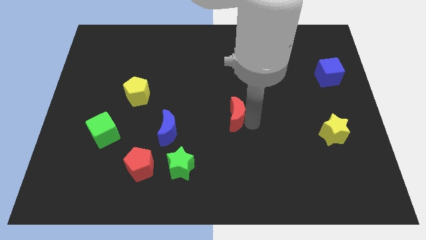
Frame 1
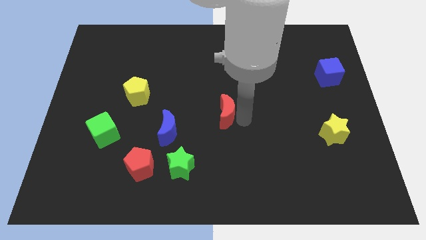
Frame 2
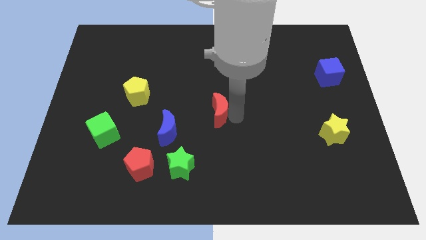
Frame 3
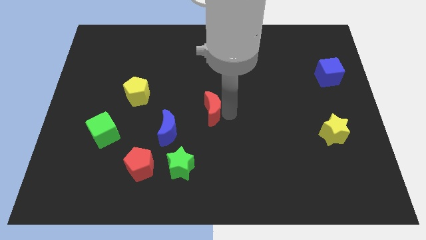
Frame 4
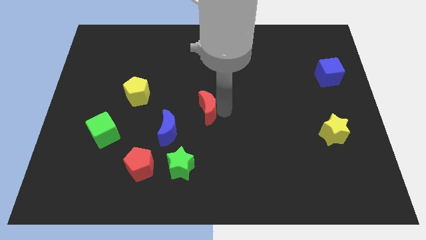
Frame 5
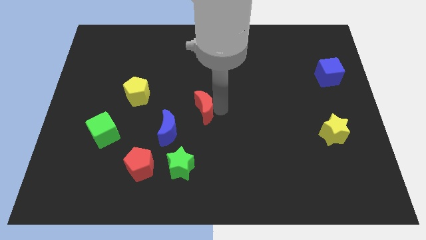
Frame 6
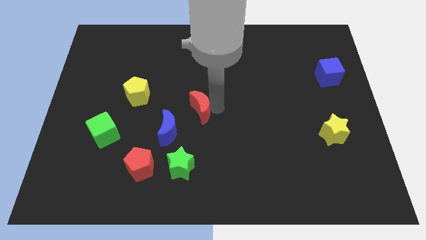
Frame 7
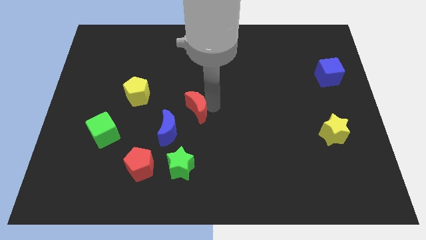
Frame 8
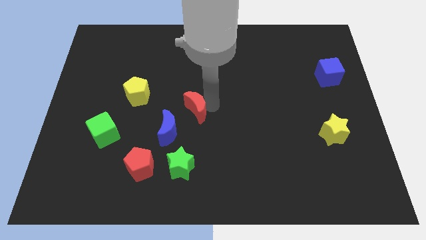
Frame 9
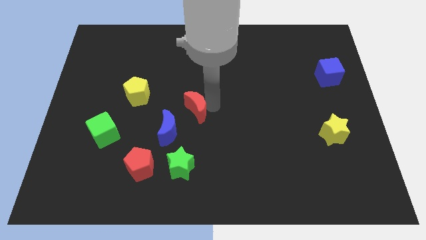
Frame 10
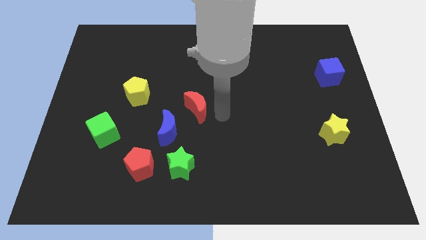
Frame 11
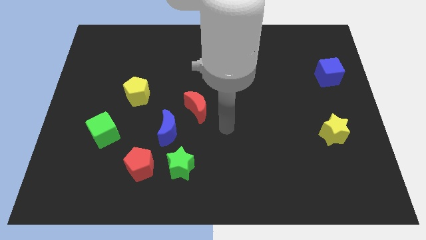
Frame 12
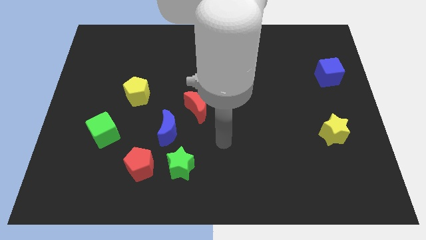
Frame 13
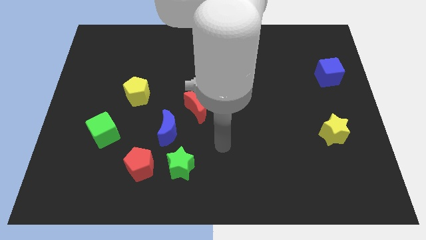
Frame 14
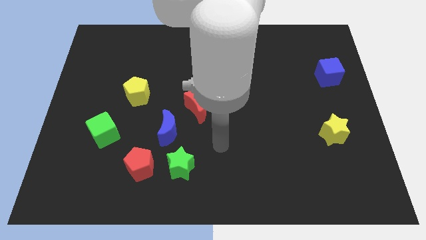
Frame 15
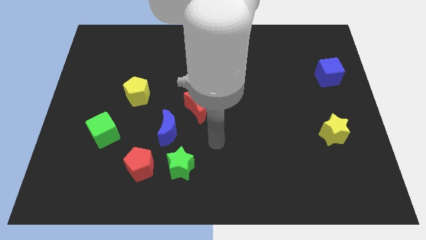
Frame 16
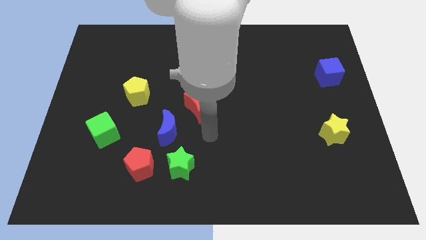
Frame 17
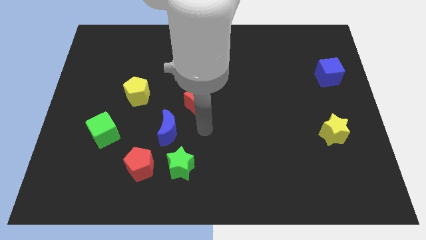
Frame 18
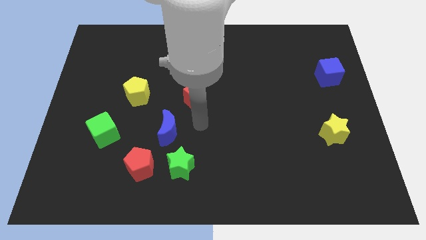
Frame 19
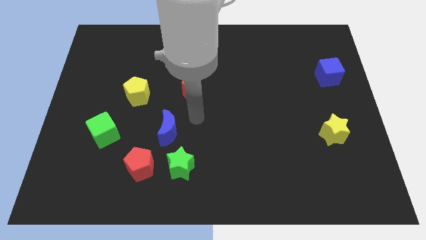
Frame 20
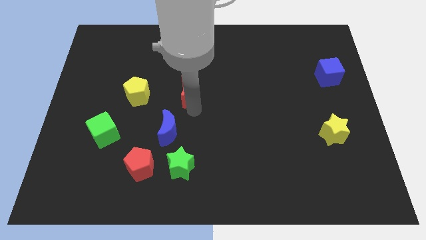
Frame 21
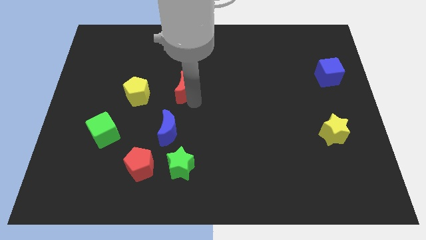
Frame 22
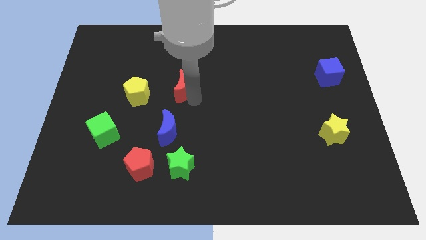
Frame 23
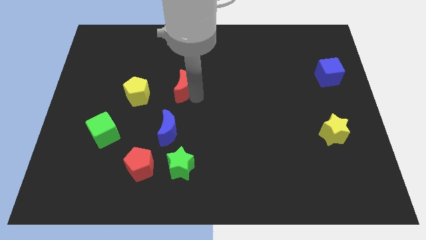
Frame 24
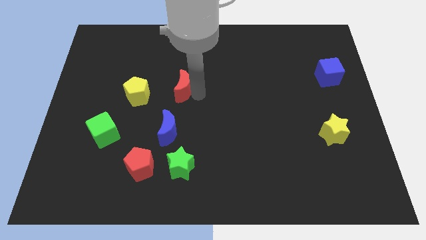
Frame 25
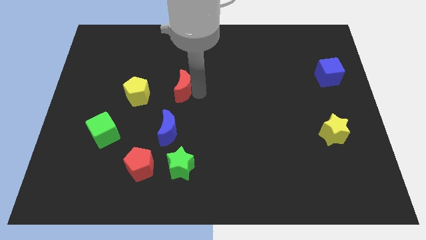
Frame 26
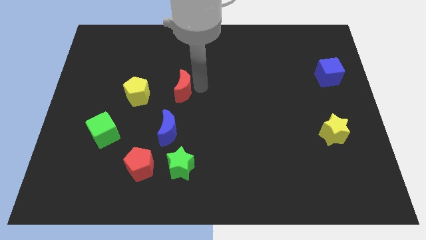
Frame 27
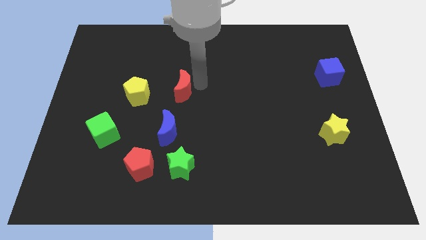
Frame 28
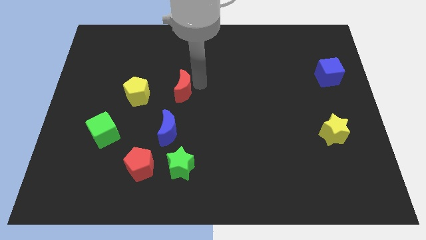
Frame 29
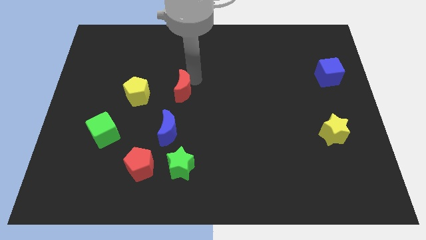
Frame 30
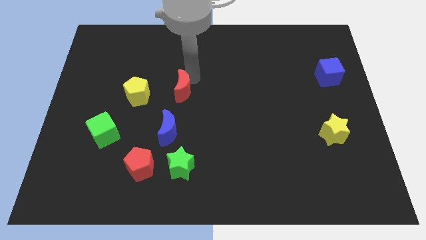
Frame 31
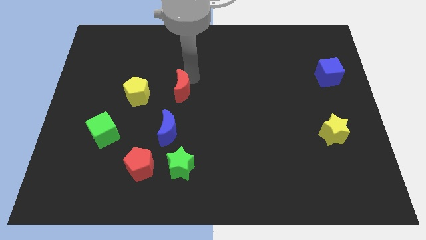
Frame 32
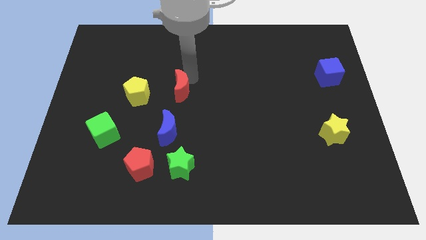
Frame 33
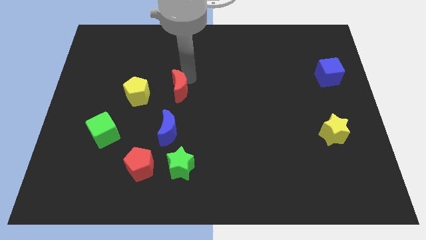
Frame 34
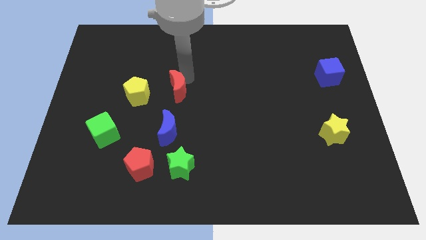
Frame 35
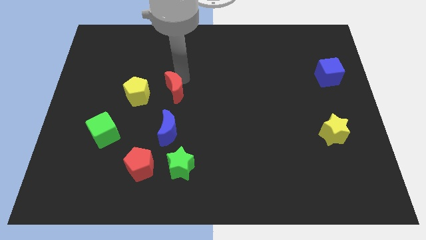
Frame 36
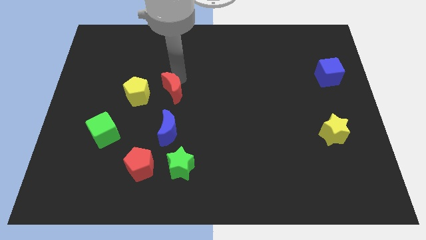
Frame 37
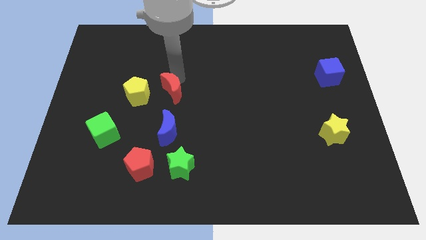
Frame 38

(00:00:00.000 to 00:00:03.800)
move the red crescent to the right of the yellow pentagon

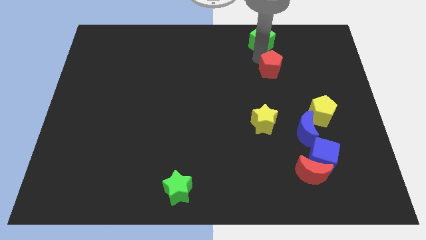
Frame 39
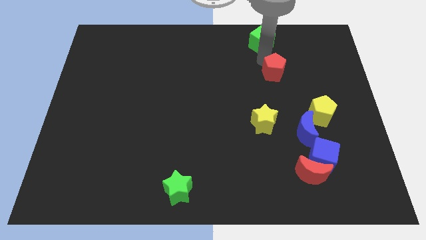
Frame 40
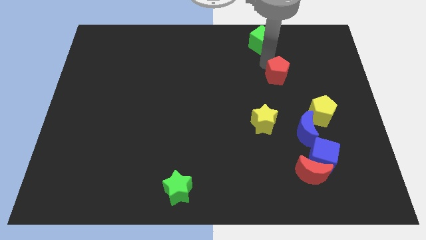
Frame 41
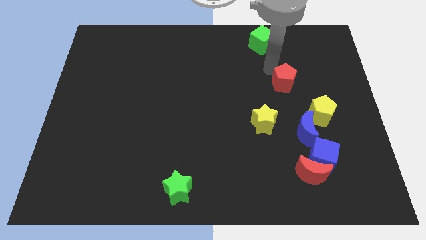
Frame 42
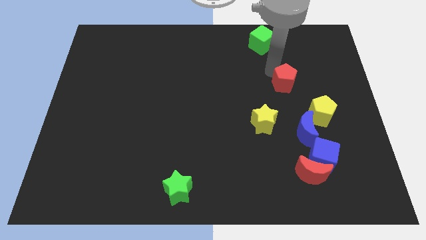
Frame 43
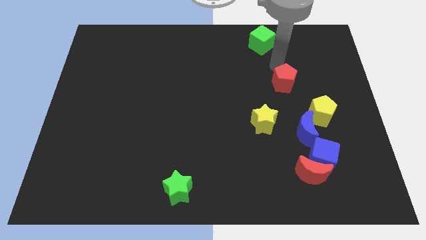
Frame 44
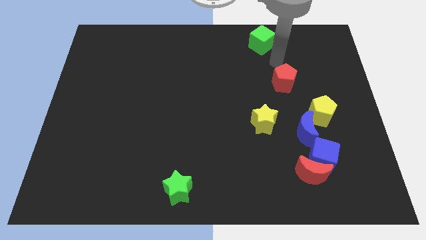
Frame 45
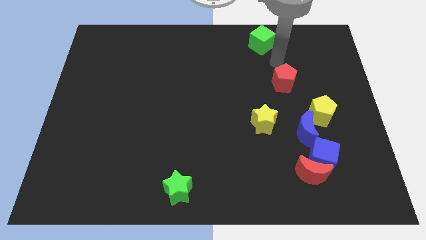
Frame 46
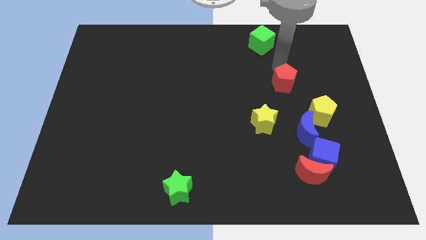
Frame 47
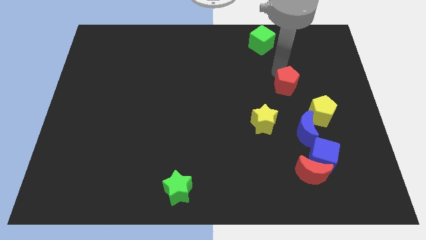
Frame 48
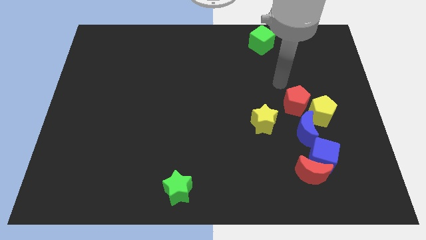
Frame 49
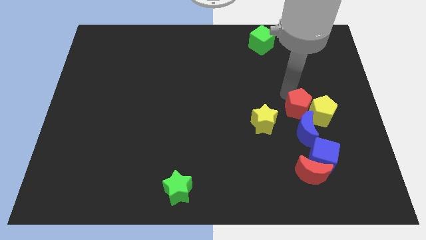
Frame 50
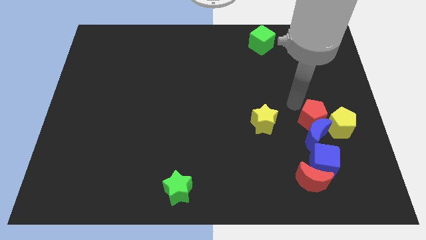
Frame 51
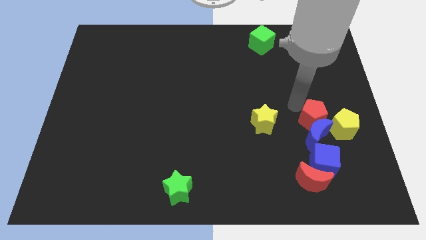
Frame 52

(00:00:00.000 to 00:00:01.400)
push the red pentagon to the top of the blue crescent

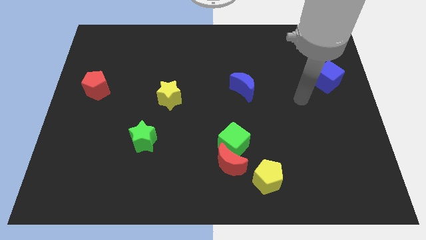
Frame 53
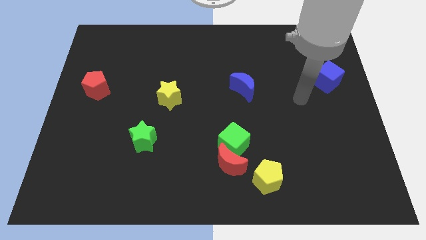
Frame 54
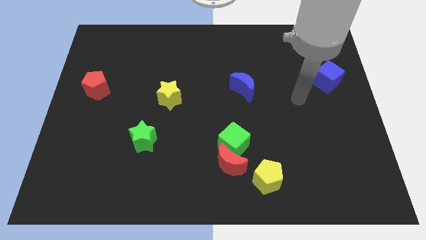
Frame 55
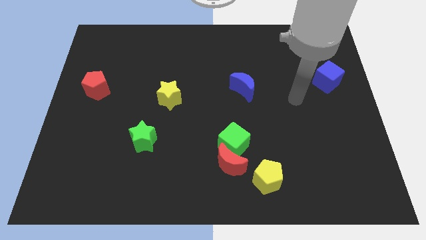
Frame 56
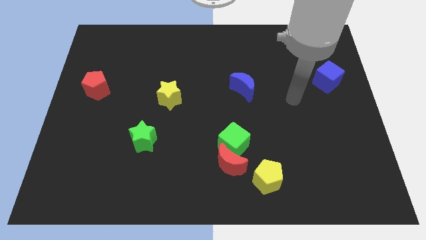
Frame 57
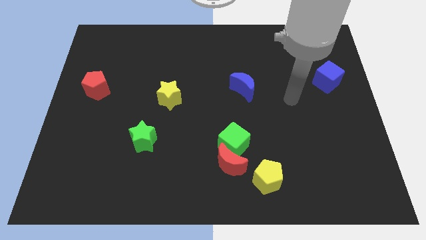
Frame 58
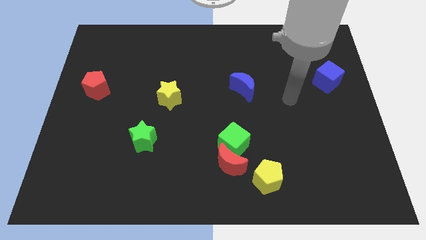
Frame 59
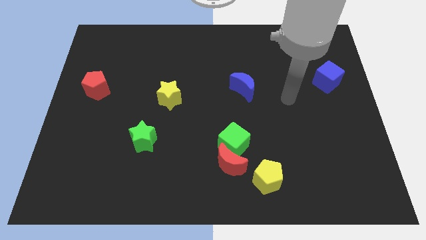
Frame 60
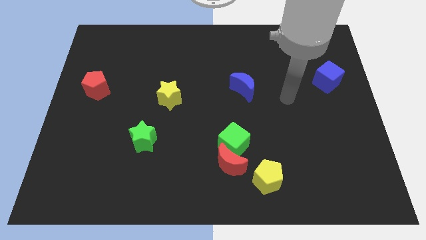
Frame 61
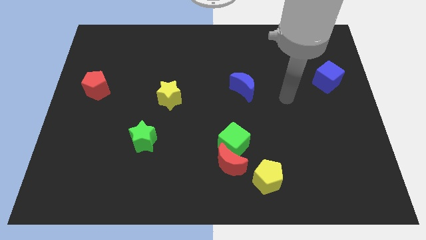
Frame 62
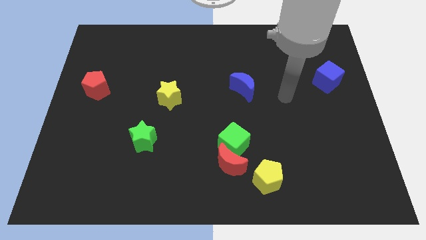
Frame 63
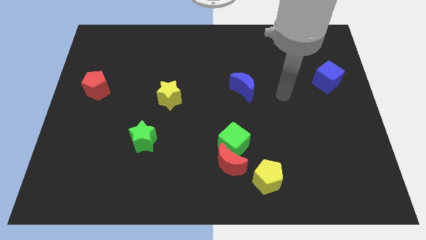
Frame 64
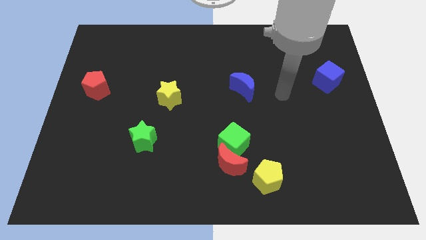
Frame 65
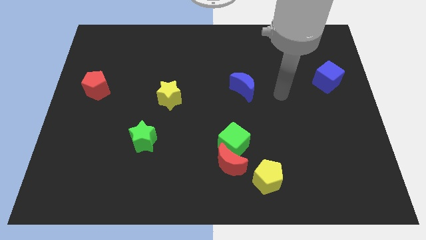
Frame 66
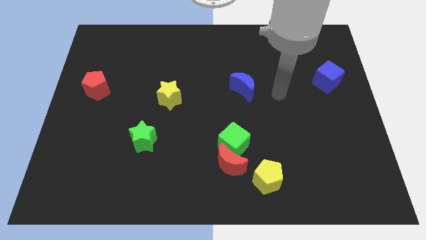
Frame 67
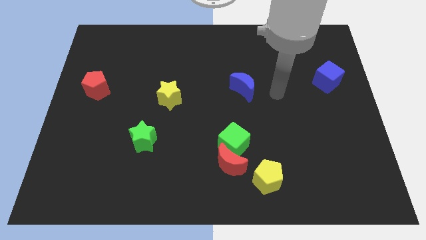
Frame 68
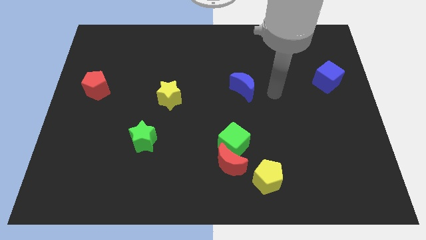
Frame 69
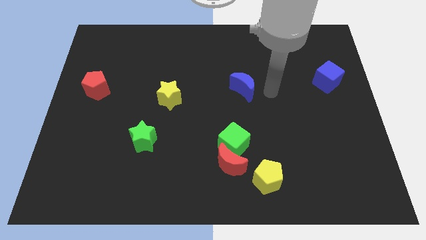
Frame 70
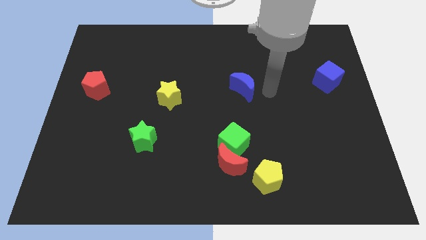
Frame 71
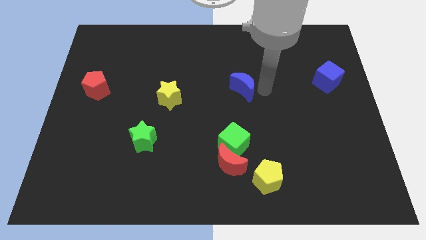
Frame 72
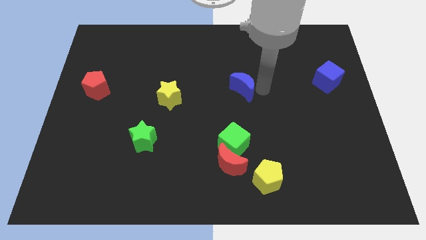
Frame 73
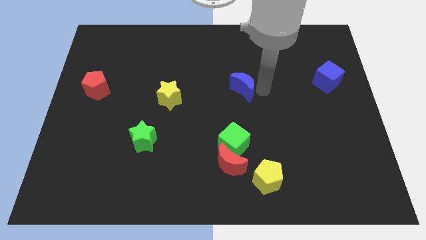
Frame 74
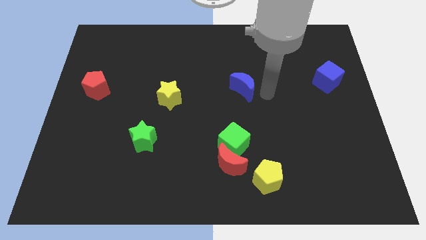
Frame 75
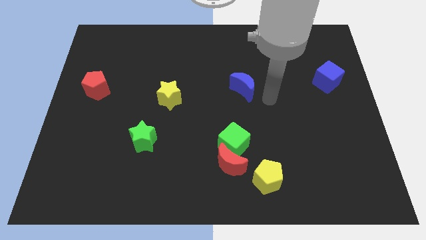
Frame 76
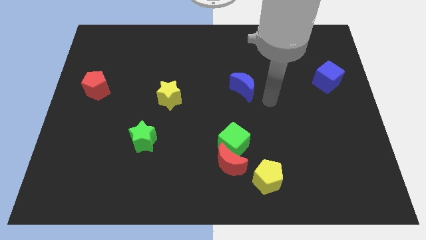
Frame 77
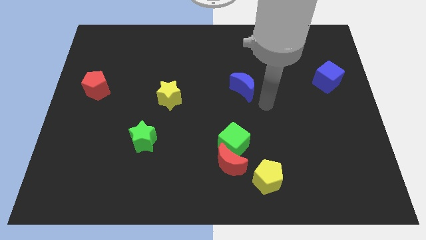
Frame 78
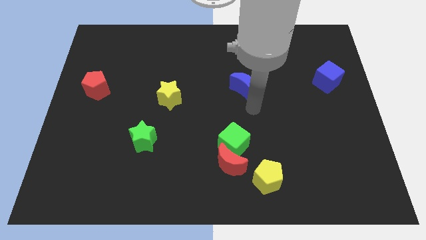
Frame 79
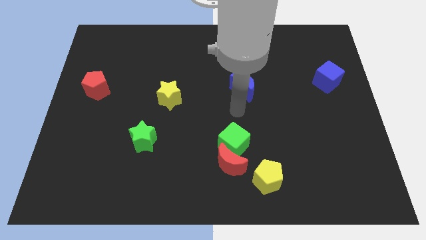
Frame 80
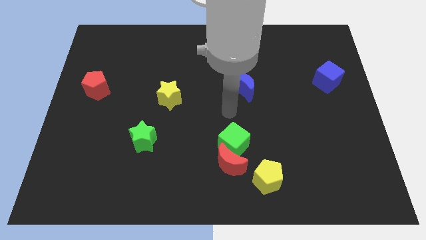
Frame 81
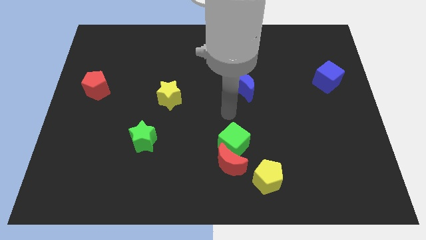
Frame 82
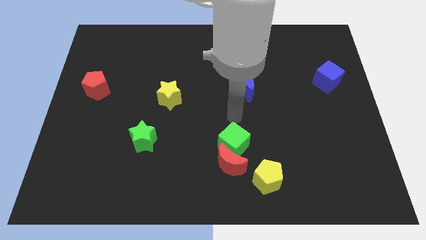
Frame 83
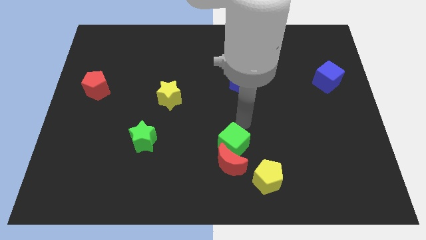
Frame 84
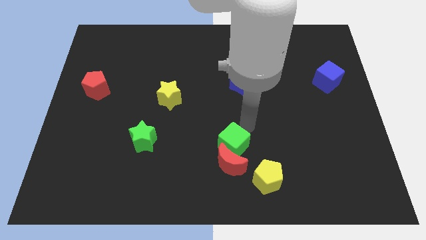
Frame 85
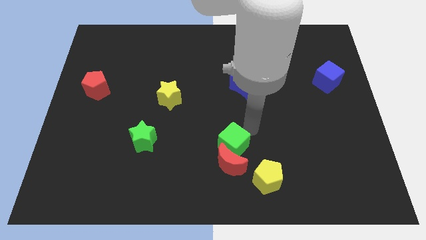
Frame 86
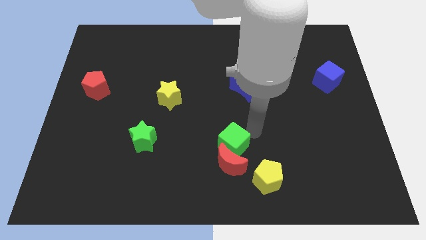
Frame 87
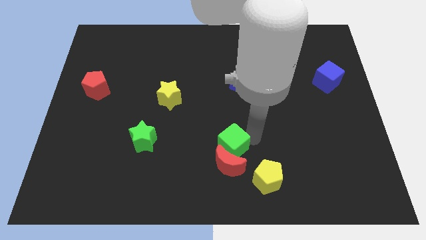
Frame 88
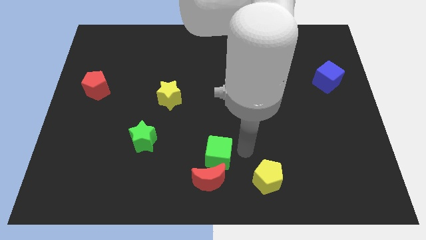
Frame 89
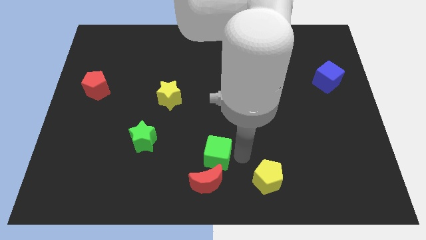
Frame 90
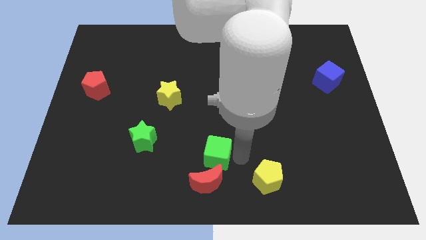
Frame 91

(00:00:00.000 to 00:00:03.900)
point your arm right to green cube
